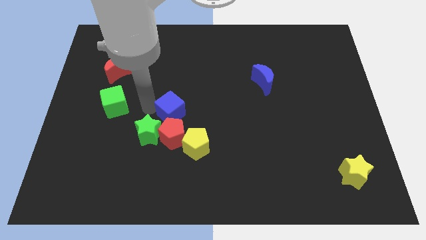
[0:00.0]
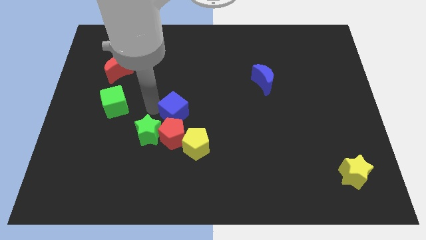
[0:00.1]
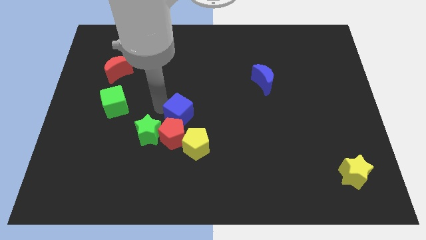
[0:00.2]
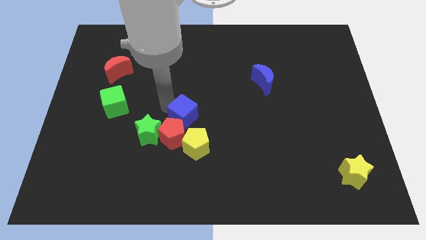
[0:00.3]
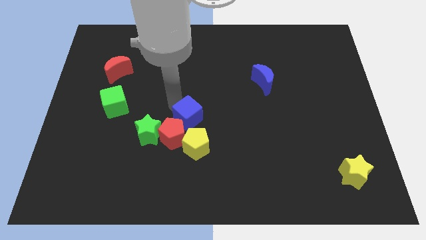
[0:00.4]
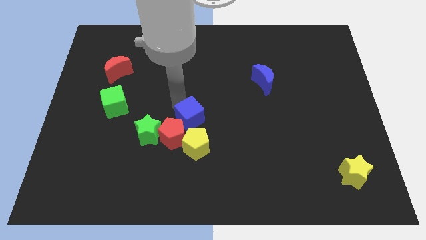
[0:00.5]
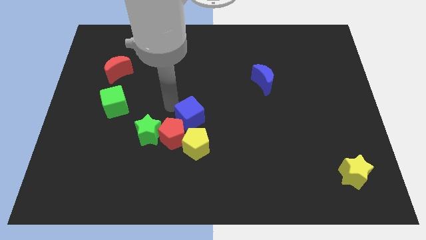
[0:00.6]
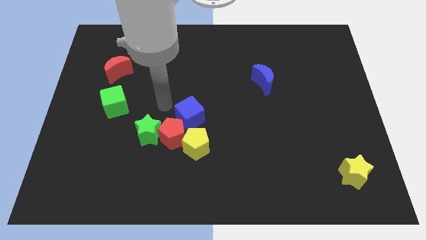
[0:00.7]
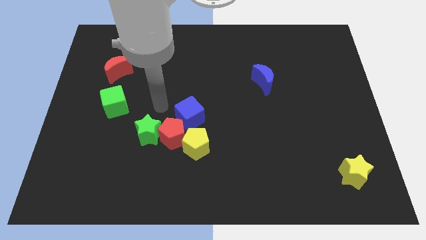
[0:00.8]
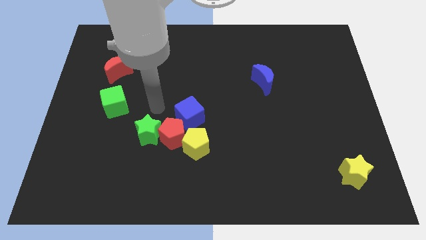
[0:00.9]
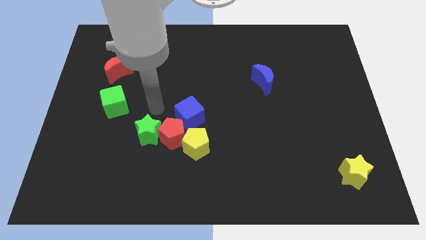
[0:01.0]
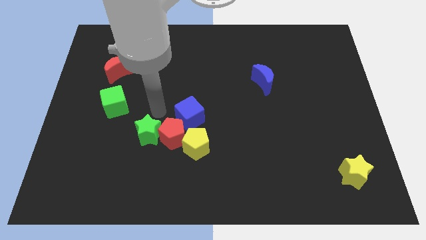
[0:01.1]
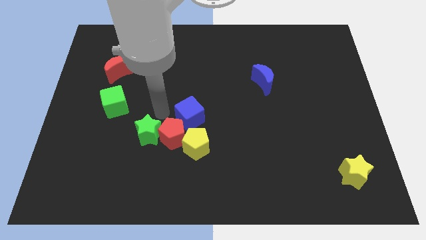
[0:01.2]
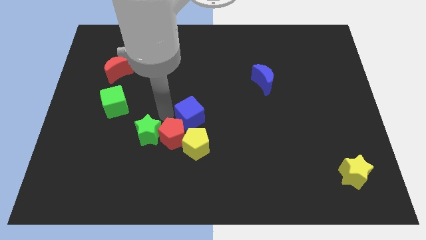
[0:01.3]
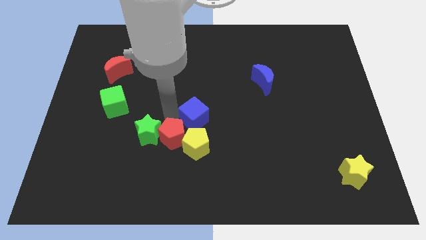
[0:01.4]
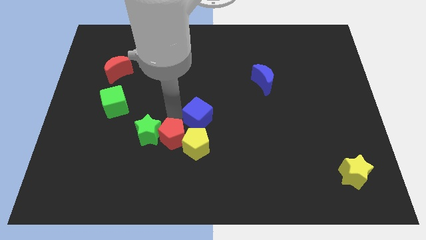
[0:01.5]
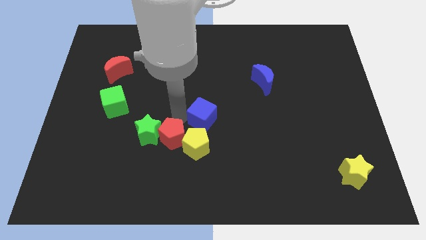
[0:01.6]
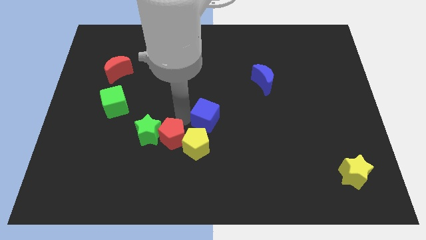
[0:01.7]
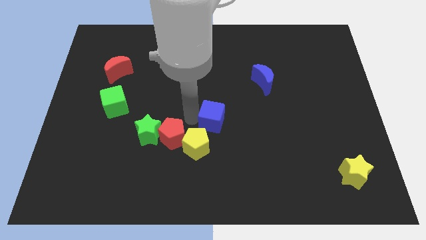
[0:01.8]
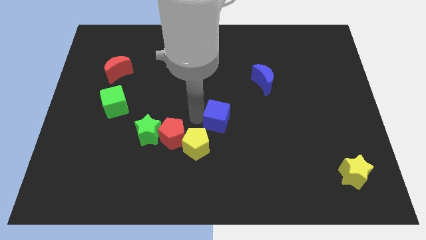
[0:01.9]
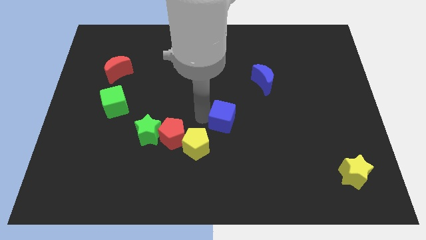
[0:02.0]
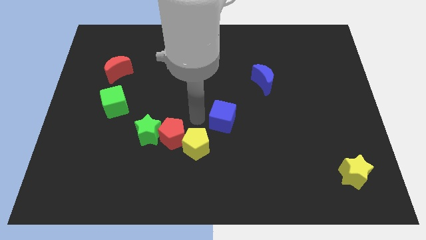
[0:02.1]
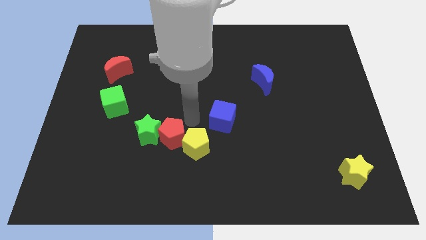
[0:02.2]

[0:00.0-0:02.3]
place the blue cube in between the yellow pentagon and blue moon

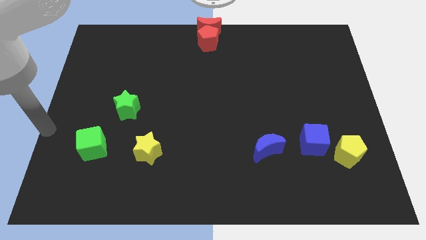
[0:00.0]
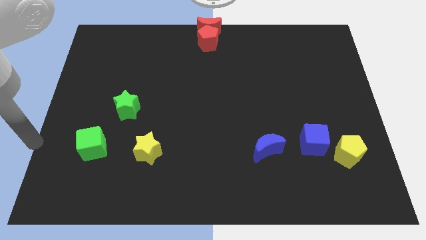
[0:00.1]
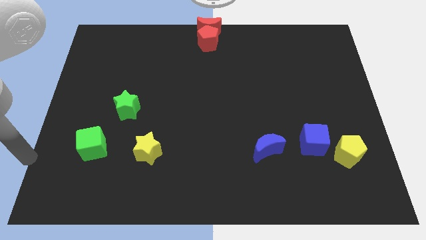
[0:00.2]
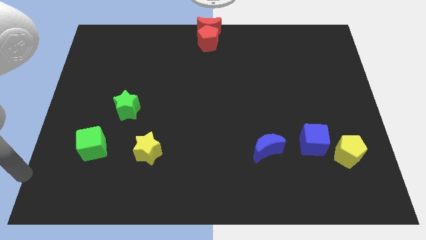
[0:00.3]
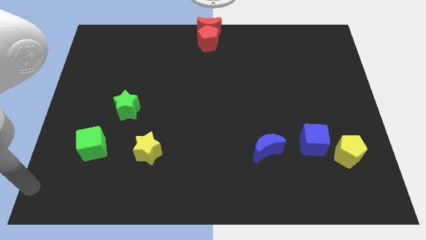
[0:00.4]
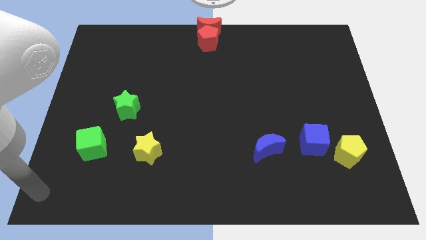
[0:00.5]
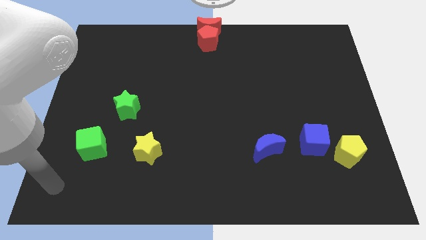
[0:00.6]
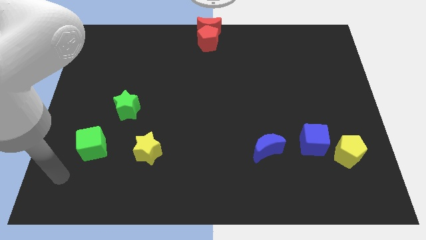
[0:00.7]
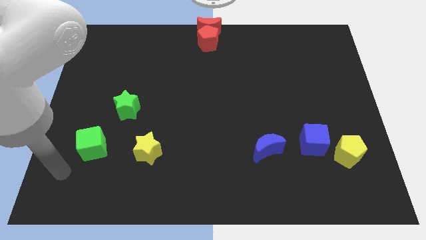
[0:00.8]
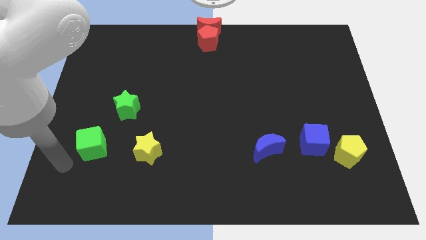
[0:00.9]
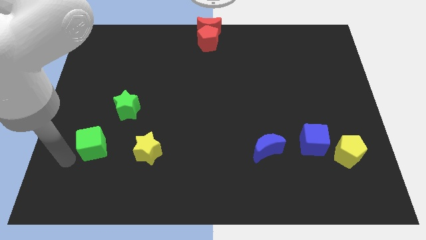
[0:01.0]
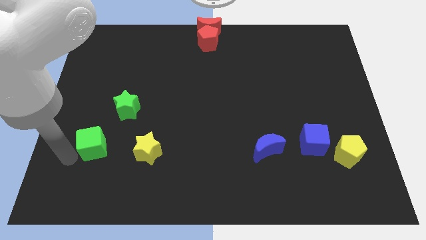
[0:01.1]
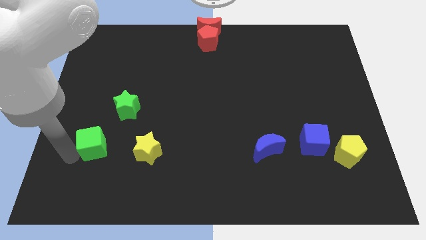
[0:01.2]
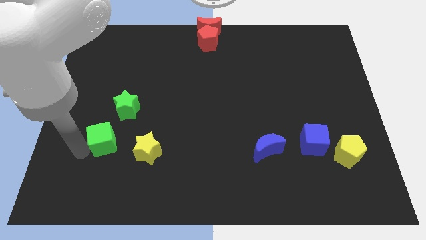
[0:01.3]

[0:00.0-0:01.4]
touch the bottom of green cube

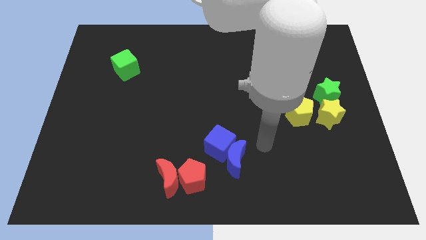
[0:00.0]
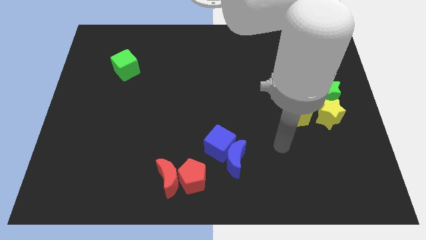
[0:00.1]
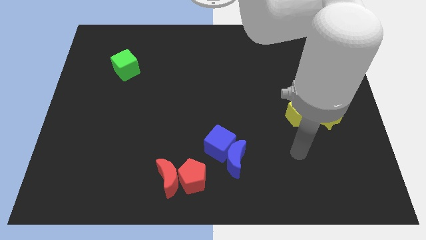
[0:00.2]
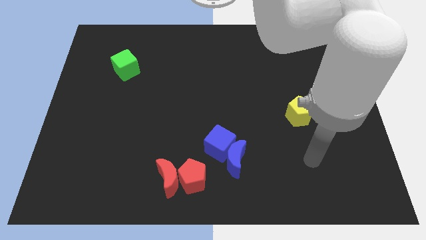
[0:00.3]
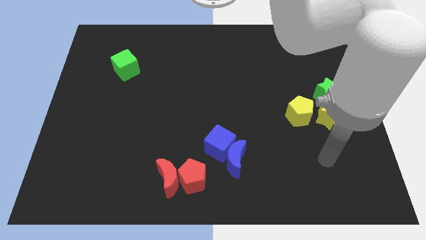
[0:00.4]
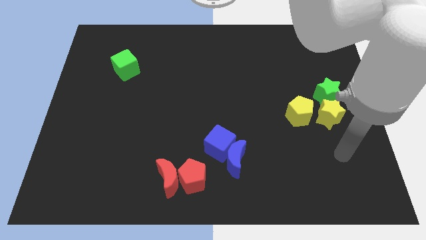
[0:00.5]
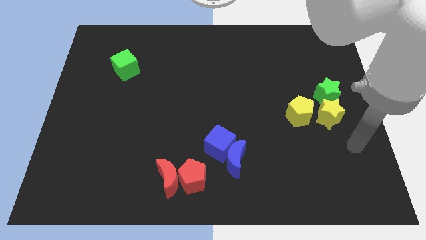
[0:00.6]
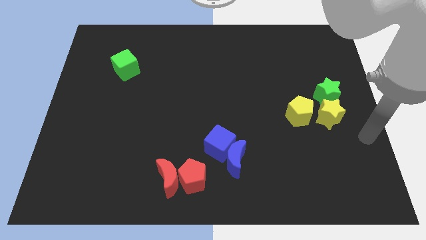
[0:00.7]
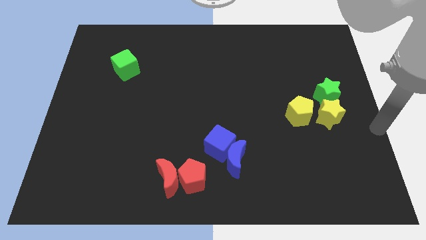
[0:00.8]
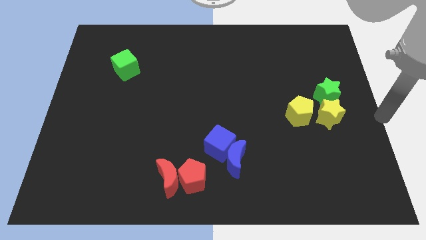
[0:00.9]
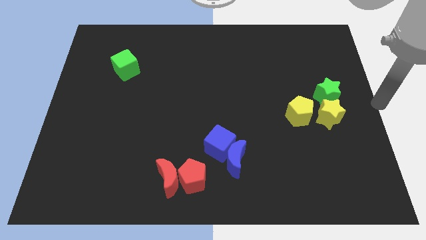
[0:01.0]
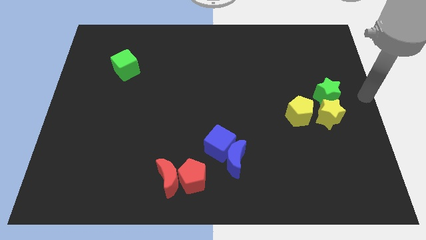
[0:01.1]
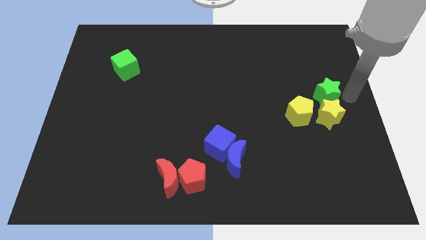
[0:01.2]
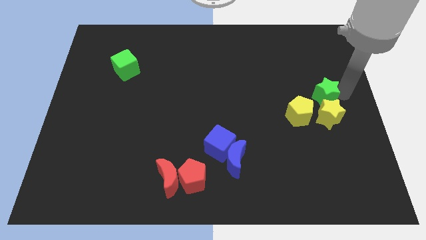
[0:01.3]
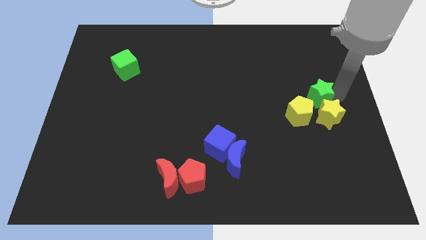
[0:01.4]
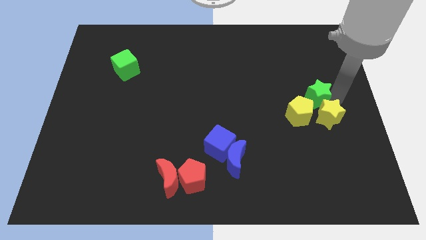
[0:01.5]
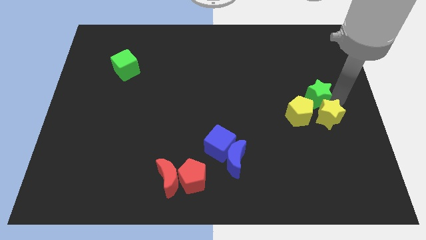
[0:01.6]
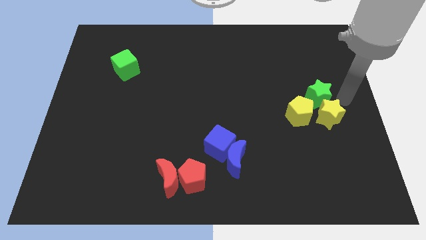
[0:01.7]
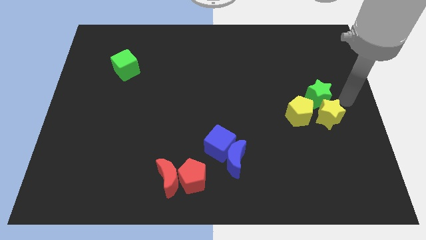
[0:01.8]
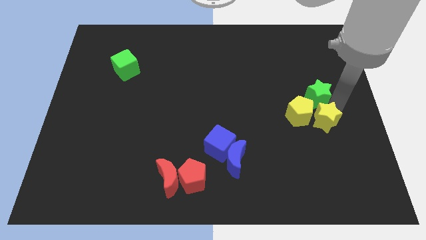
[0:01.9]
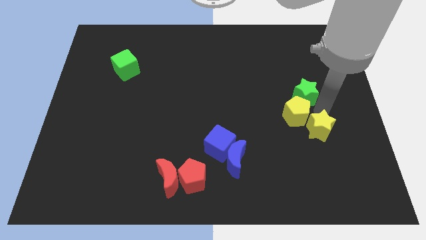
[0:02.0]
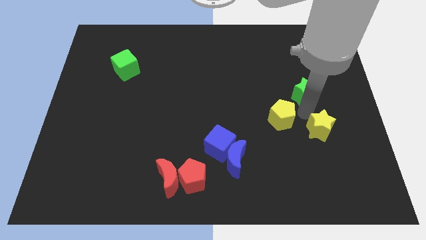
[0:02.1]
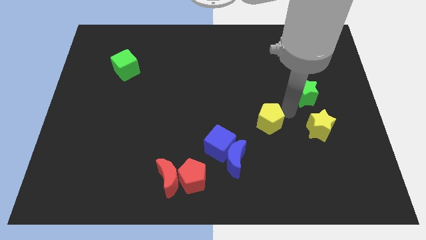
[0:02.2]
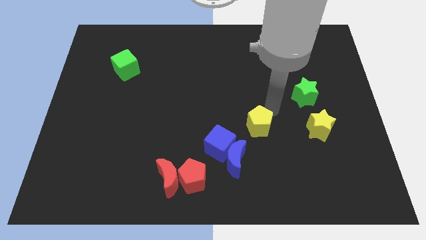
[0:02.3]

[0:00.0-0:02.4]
separate green star and yellow star

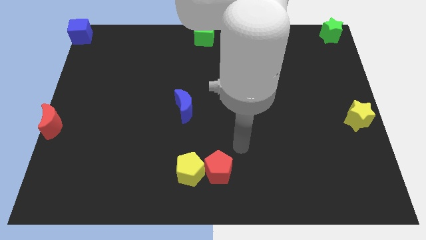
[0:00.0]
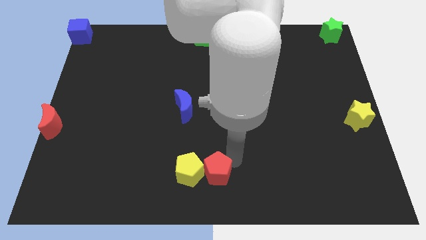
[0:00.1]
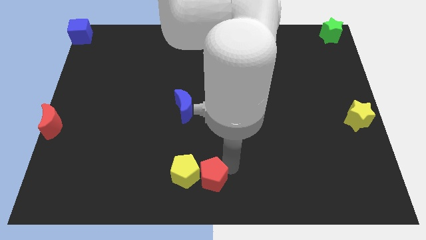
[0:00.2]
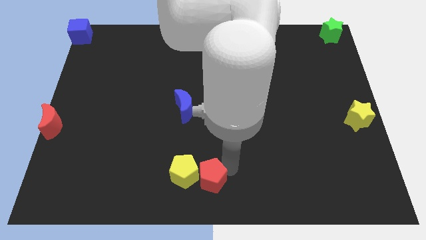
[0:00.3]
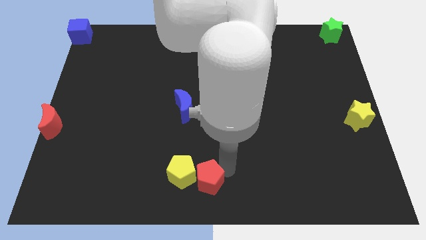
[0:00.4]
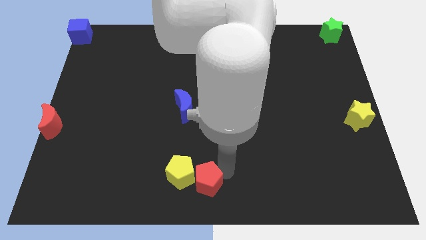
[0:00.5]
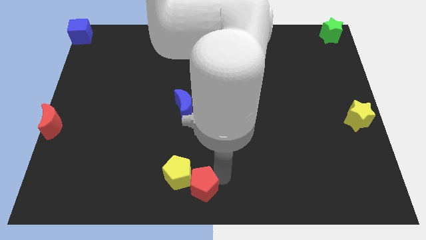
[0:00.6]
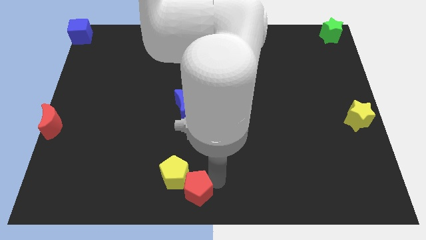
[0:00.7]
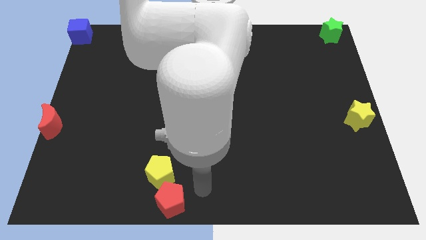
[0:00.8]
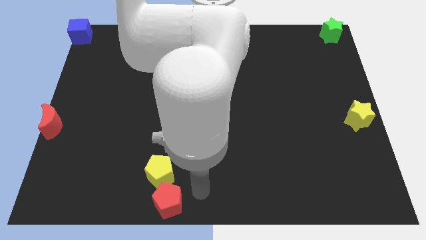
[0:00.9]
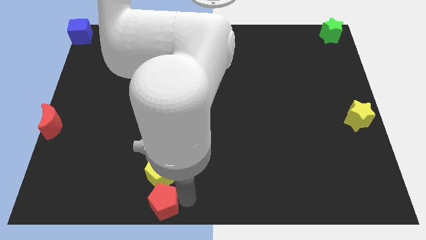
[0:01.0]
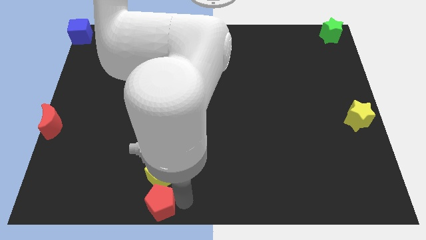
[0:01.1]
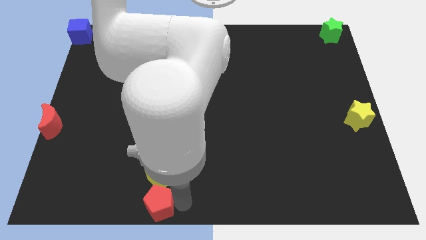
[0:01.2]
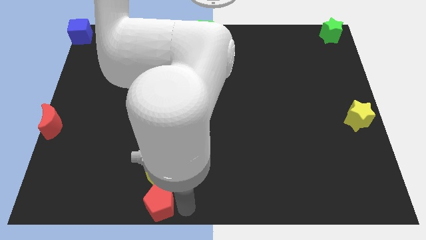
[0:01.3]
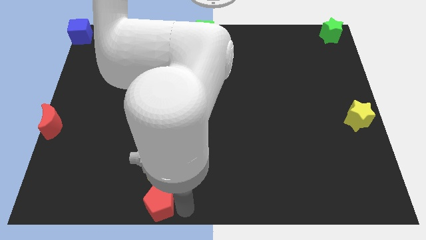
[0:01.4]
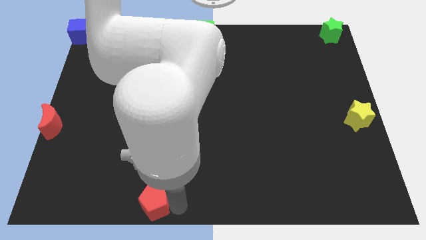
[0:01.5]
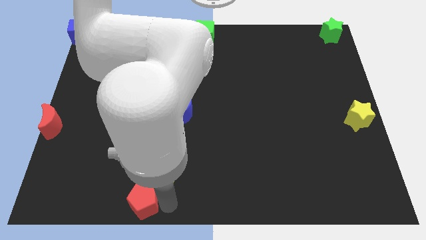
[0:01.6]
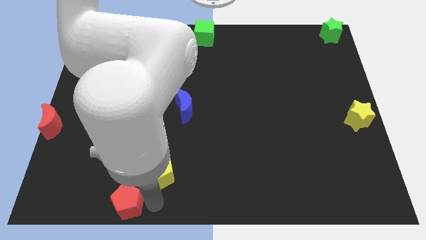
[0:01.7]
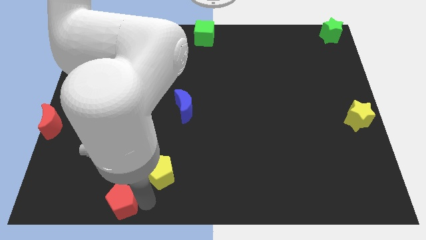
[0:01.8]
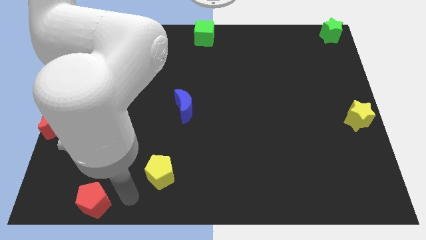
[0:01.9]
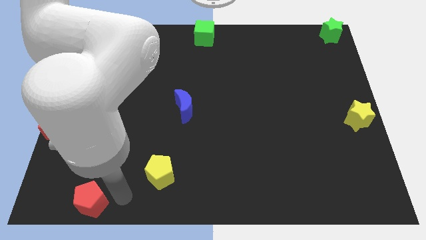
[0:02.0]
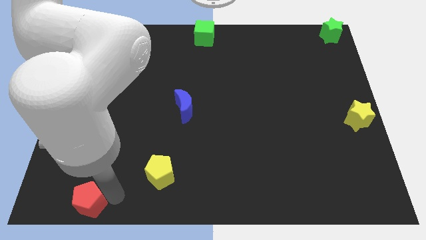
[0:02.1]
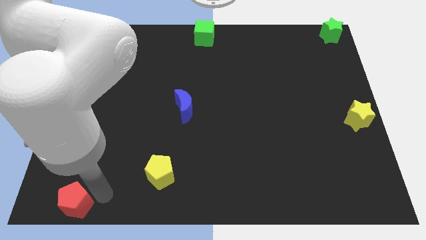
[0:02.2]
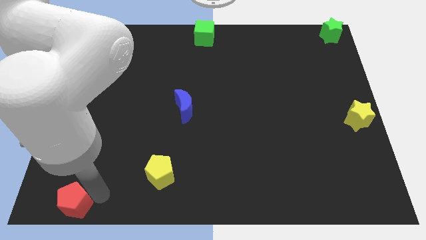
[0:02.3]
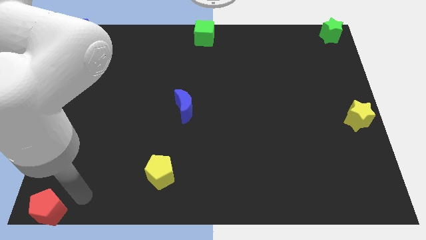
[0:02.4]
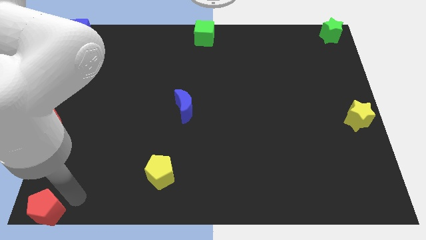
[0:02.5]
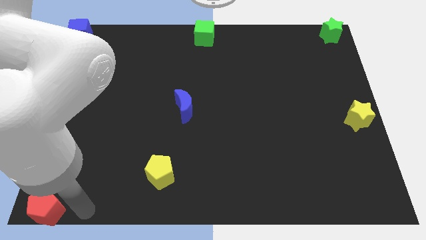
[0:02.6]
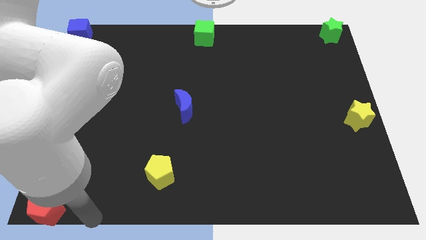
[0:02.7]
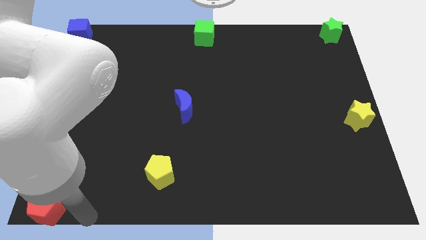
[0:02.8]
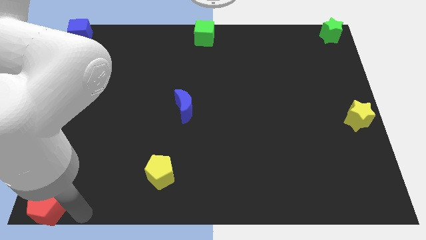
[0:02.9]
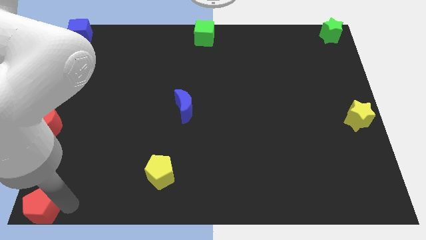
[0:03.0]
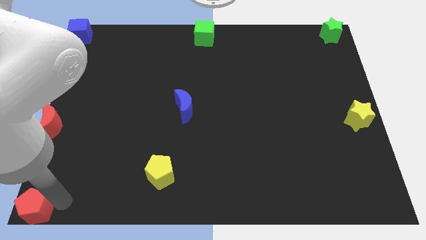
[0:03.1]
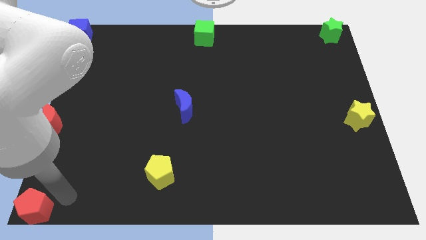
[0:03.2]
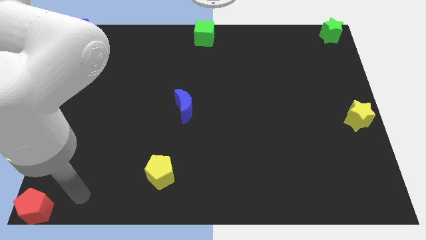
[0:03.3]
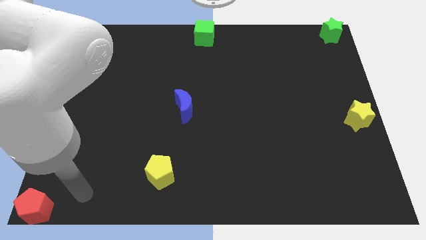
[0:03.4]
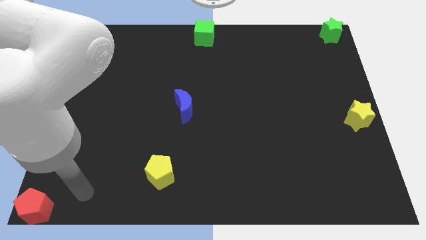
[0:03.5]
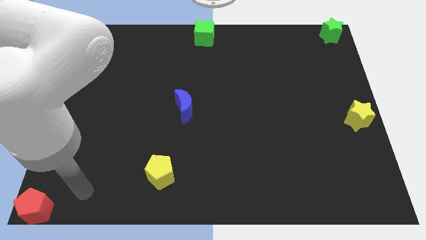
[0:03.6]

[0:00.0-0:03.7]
move red pentagon to the bottom left corner of the board
